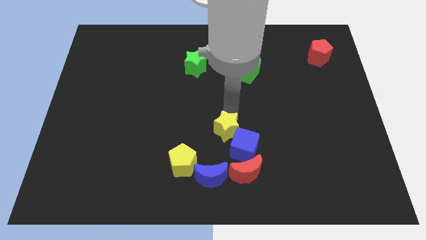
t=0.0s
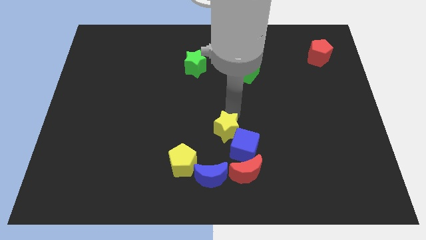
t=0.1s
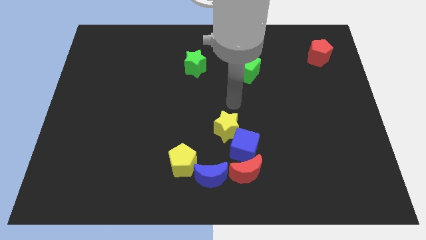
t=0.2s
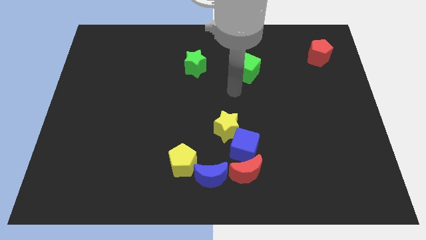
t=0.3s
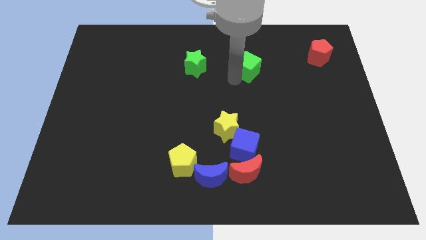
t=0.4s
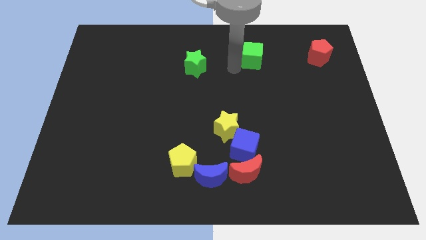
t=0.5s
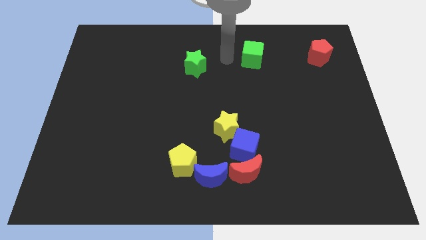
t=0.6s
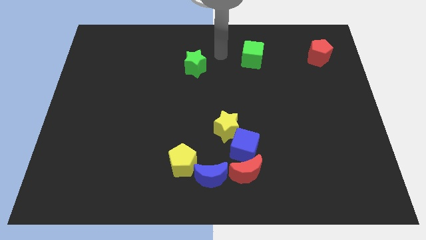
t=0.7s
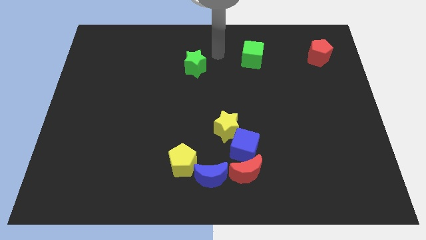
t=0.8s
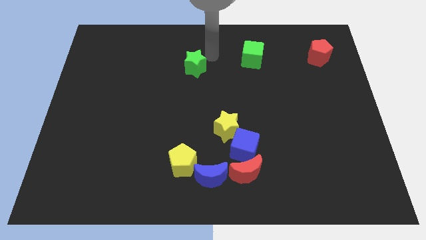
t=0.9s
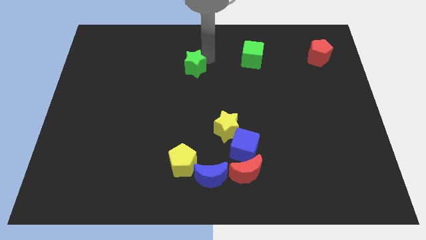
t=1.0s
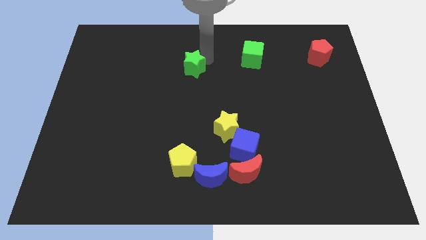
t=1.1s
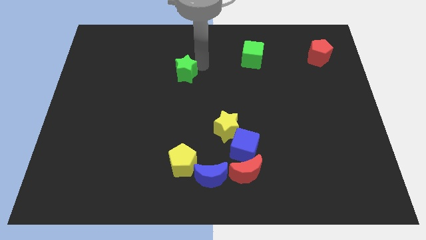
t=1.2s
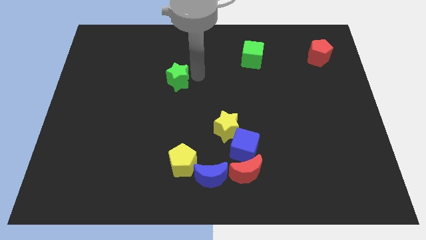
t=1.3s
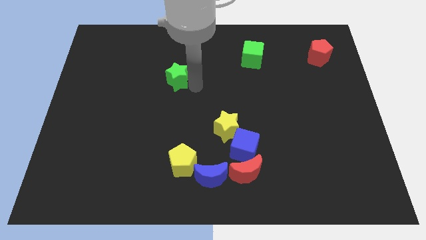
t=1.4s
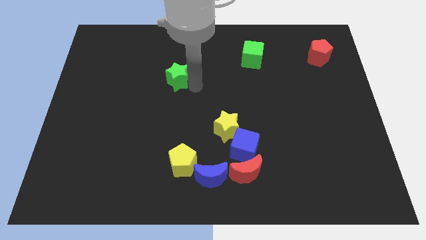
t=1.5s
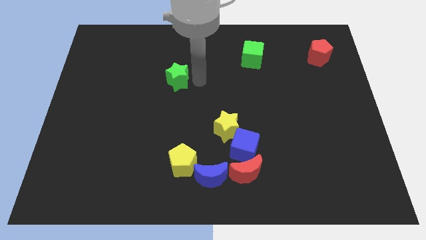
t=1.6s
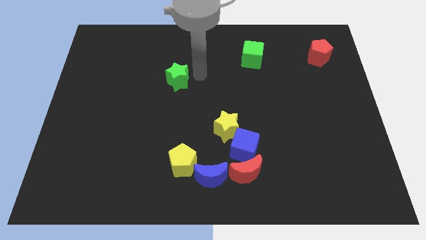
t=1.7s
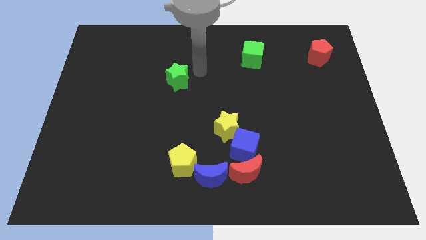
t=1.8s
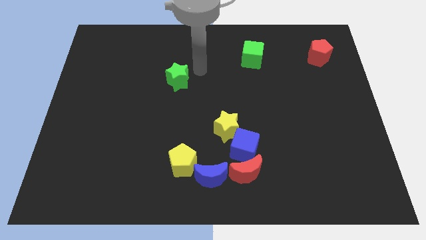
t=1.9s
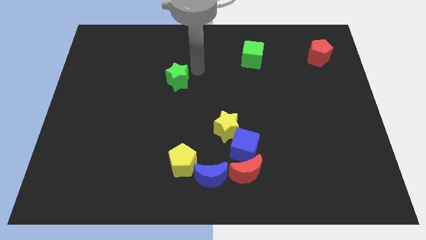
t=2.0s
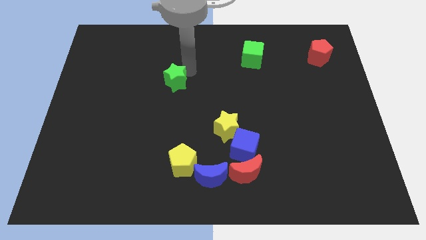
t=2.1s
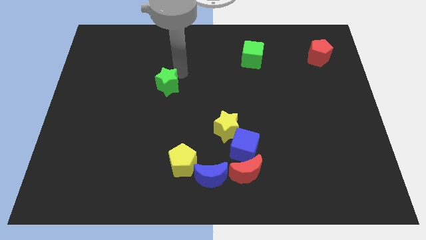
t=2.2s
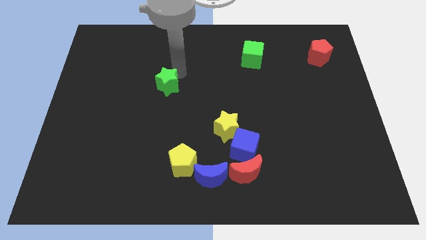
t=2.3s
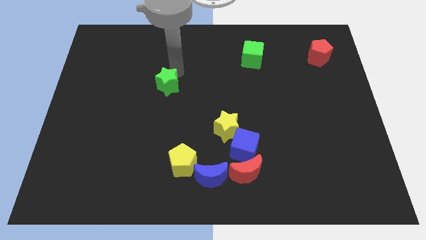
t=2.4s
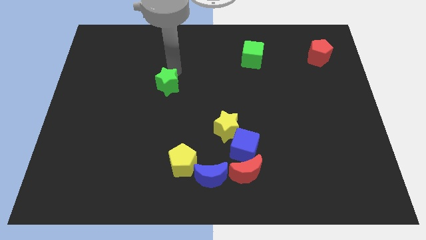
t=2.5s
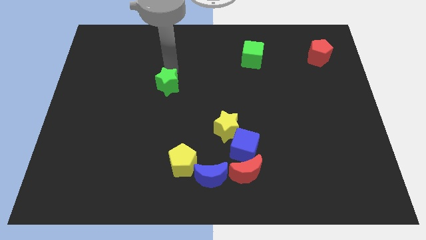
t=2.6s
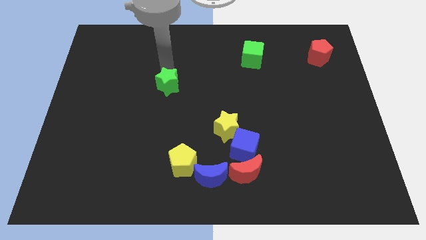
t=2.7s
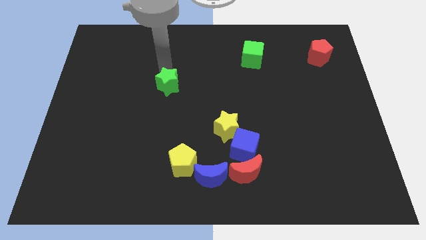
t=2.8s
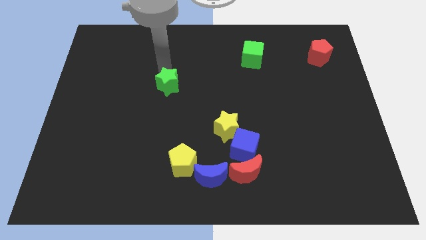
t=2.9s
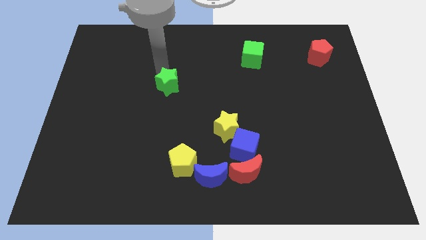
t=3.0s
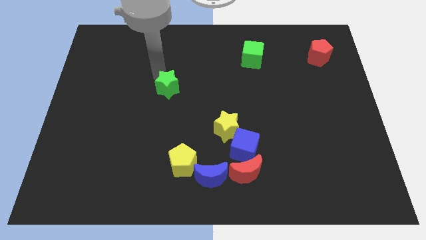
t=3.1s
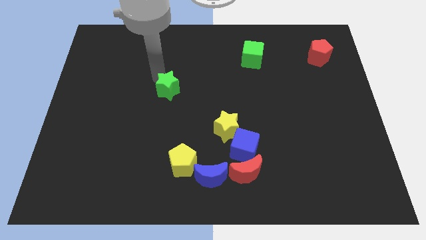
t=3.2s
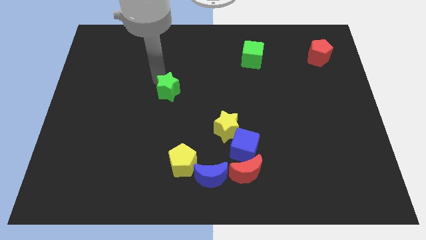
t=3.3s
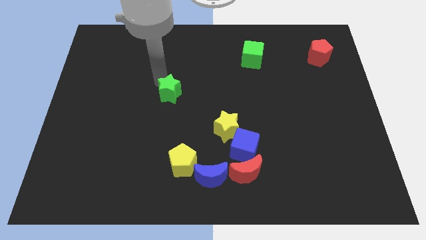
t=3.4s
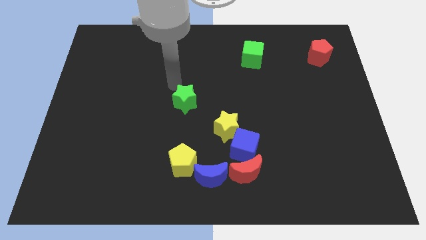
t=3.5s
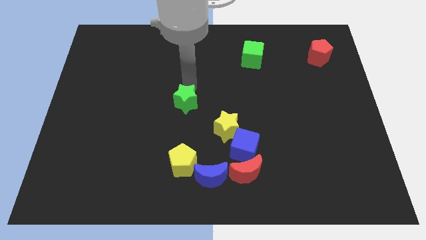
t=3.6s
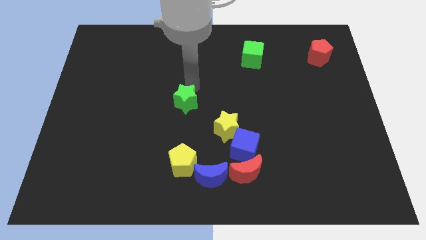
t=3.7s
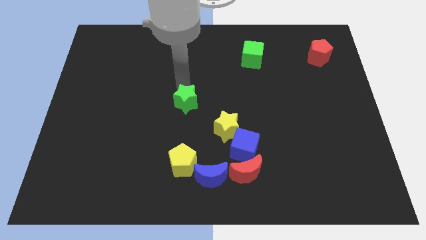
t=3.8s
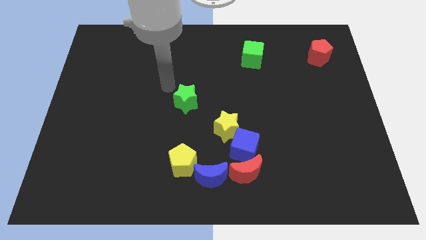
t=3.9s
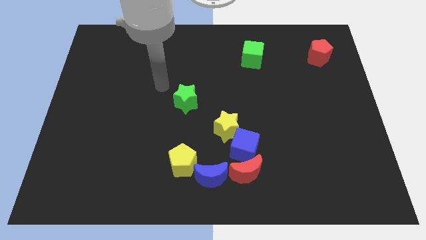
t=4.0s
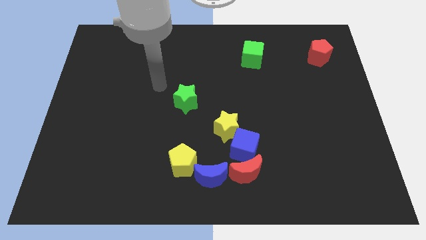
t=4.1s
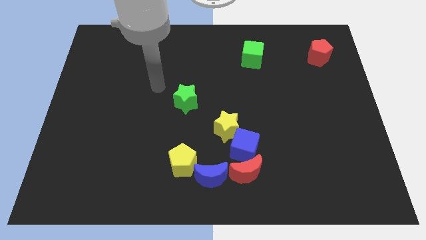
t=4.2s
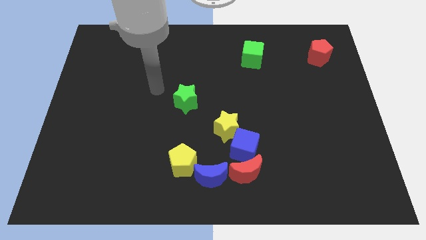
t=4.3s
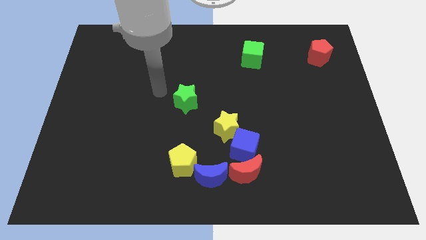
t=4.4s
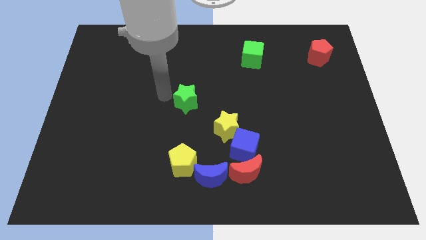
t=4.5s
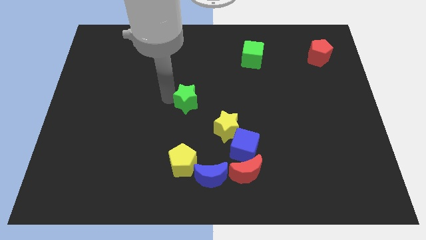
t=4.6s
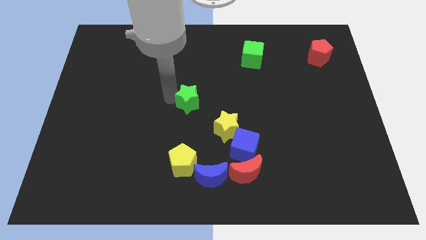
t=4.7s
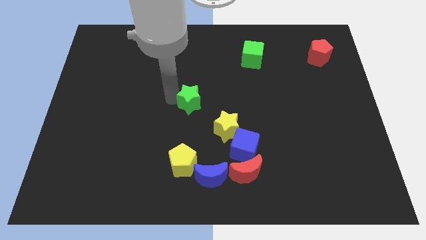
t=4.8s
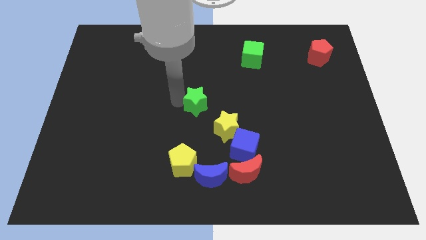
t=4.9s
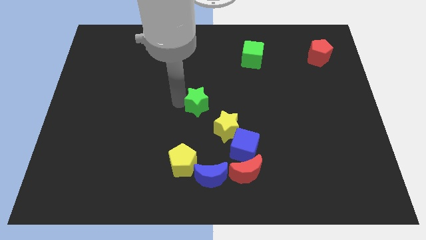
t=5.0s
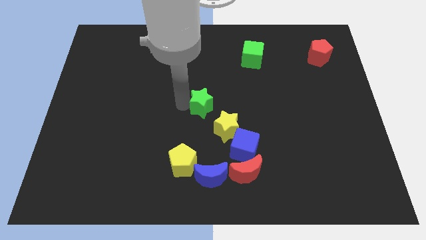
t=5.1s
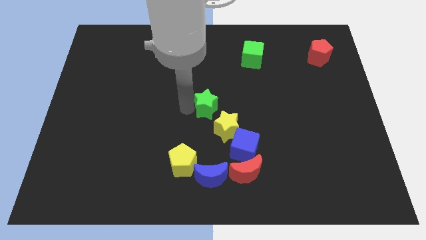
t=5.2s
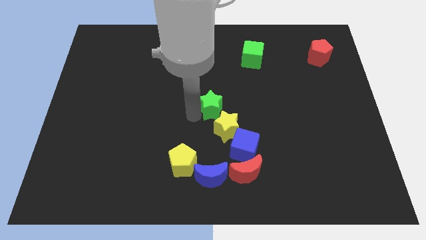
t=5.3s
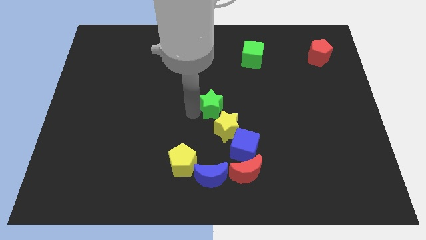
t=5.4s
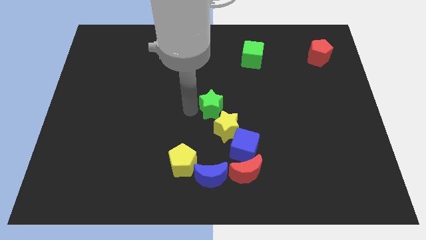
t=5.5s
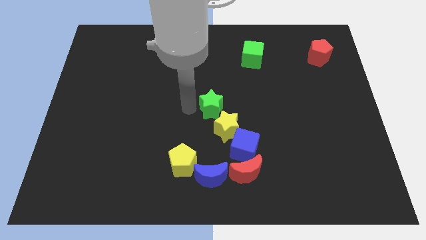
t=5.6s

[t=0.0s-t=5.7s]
push the green star above the yellow star

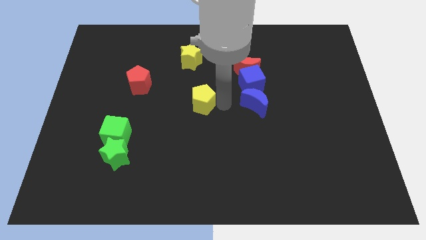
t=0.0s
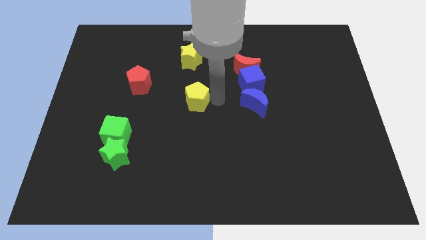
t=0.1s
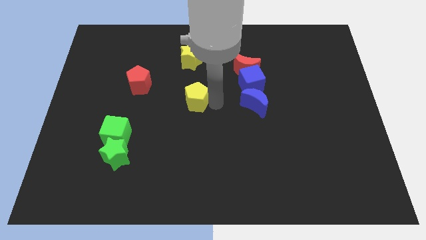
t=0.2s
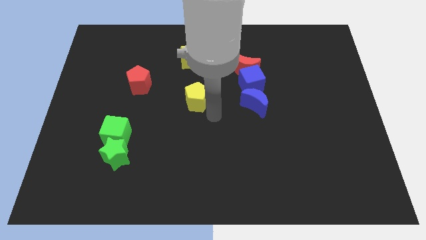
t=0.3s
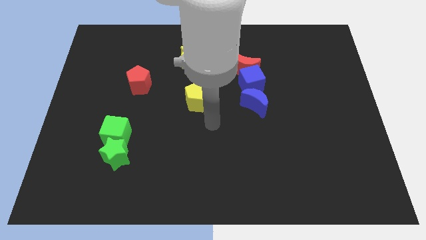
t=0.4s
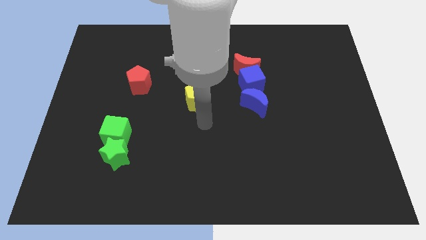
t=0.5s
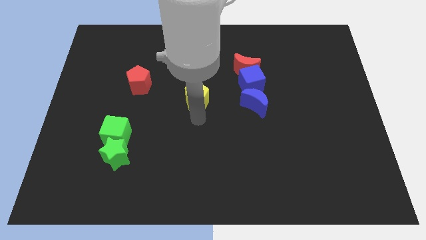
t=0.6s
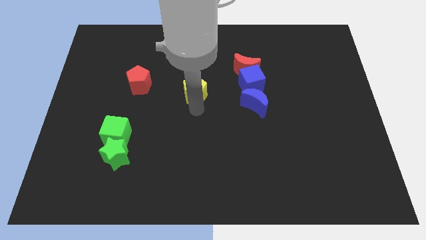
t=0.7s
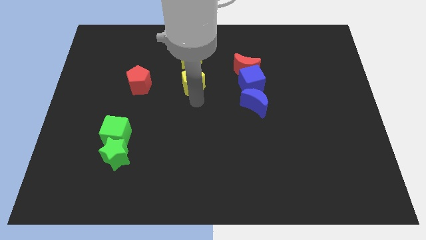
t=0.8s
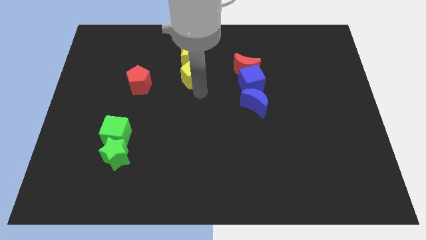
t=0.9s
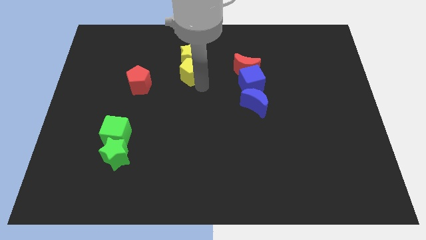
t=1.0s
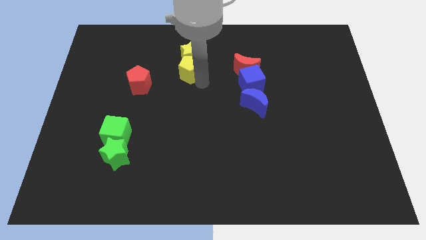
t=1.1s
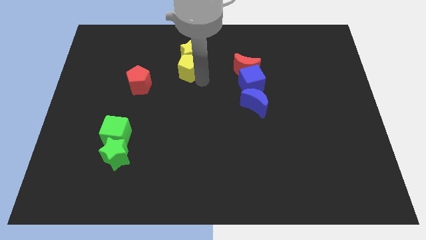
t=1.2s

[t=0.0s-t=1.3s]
put the yellow pentagon at the bottom of the yellow star

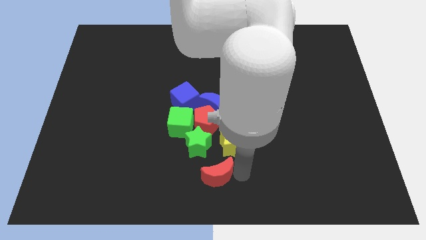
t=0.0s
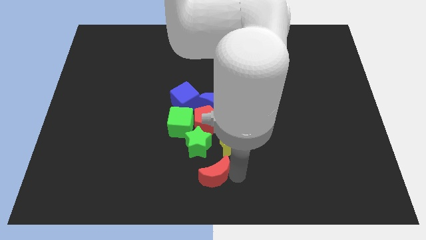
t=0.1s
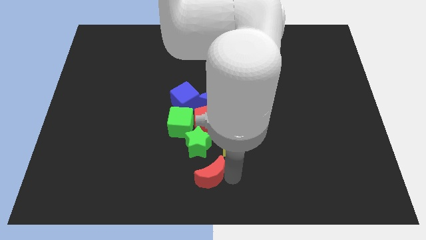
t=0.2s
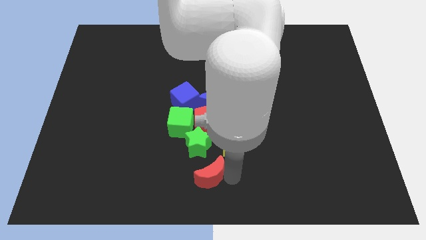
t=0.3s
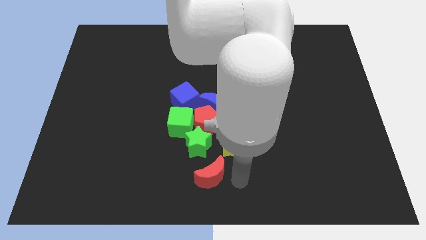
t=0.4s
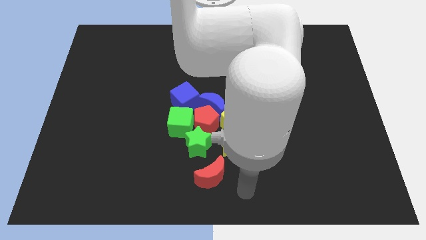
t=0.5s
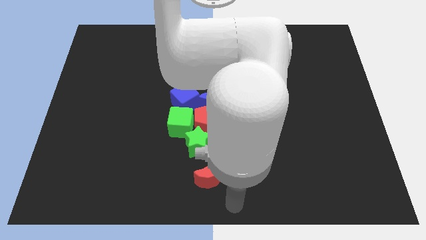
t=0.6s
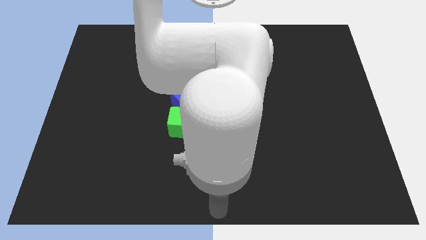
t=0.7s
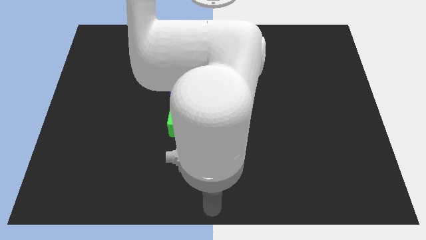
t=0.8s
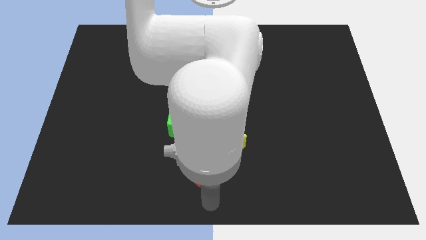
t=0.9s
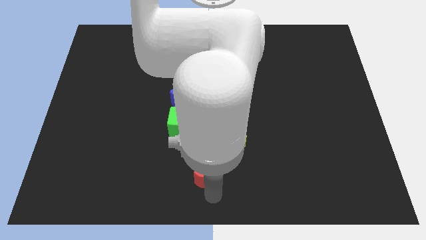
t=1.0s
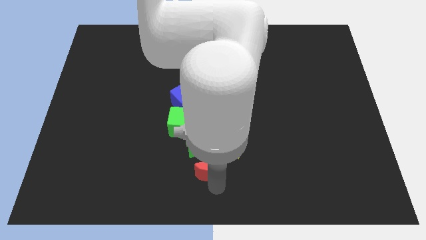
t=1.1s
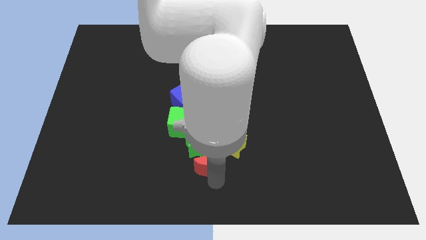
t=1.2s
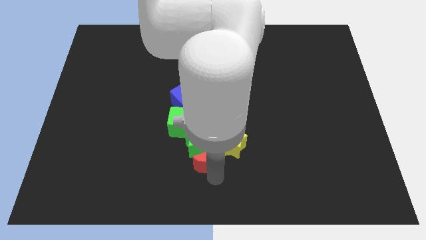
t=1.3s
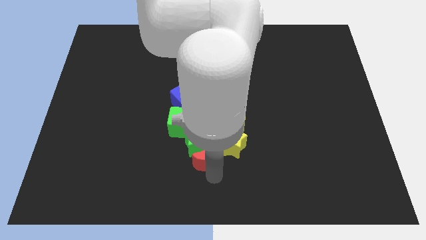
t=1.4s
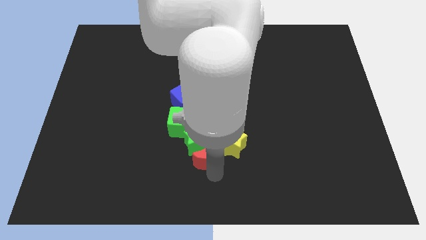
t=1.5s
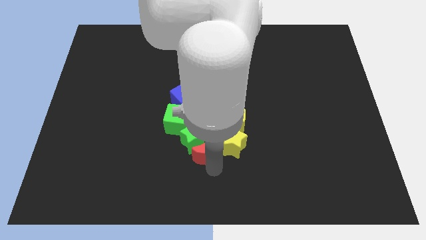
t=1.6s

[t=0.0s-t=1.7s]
put the red moon at the bottom right of the green star

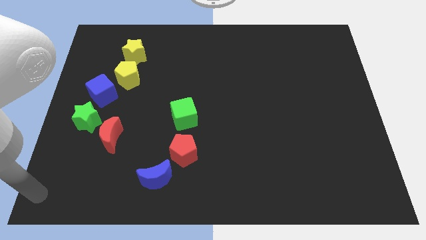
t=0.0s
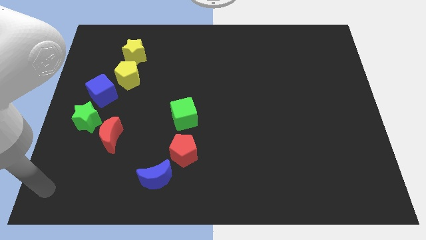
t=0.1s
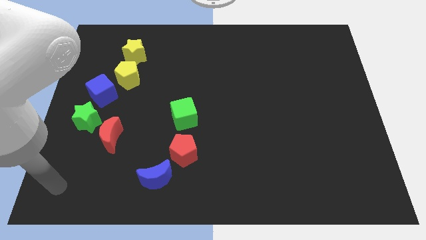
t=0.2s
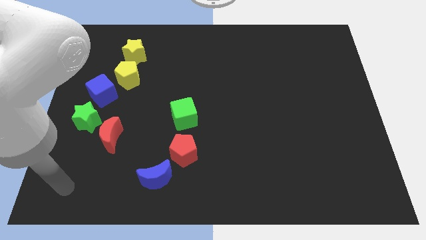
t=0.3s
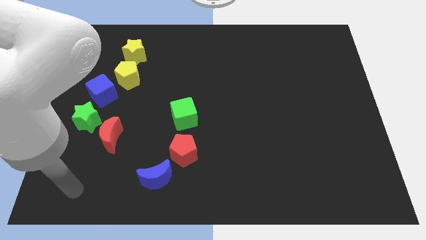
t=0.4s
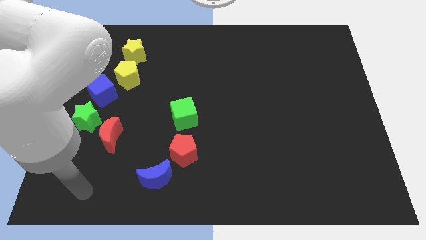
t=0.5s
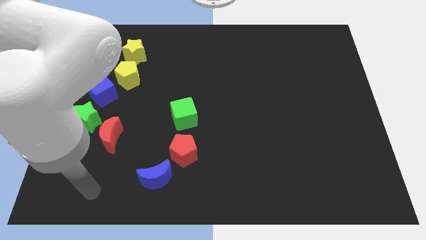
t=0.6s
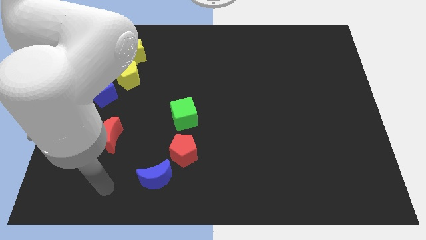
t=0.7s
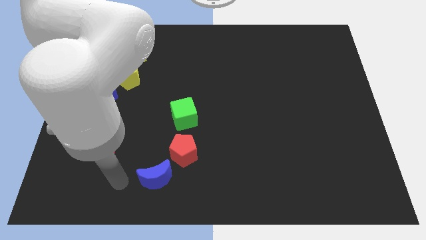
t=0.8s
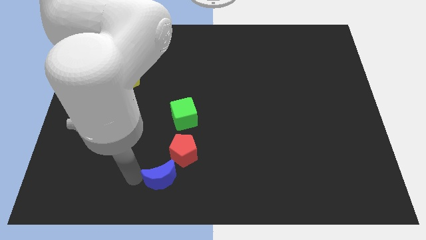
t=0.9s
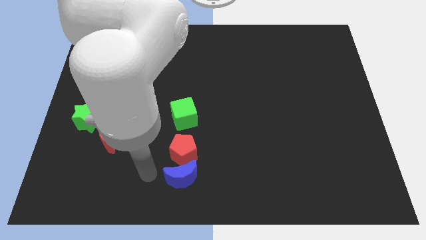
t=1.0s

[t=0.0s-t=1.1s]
place the blue moon below the red pentagon
